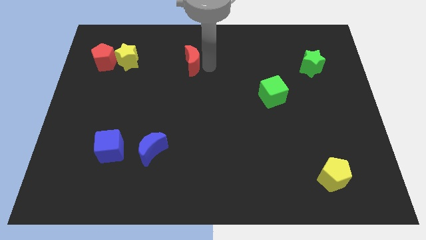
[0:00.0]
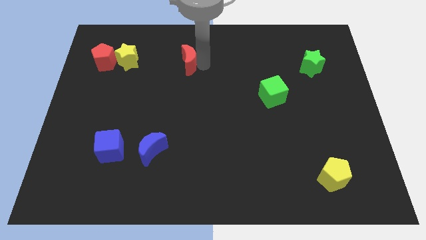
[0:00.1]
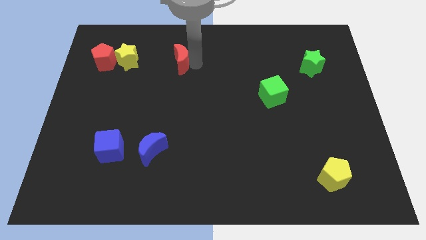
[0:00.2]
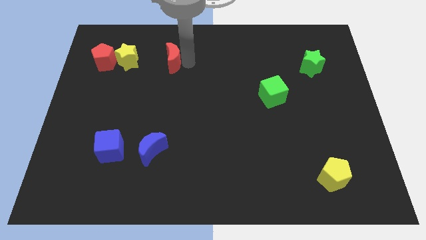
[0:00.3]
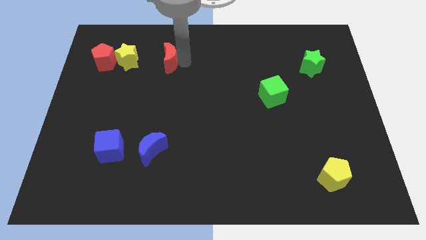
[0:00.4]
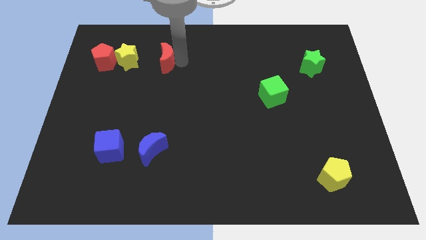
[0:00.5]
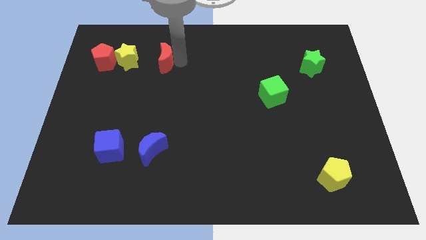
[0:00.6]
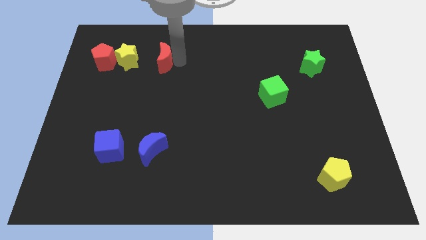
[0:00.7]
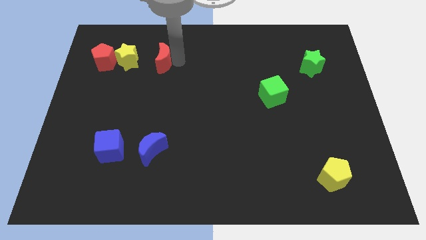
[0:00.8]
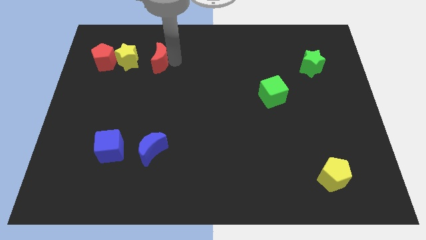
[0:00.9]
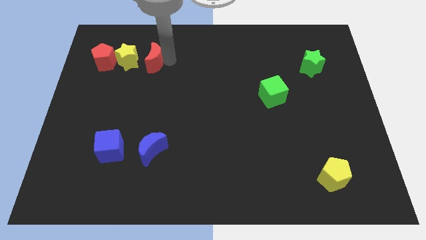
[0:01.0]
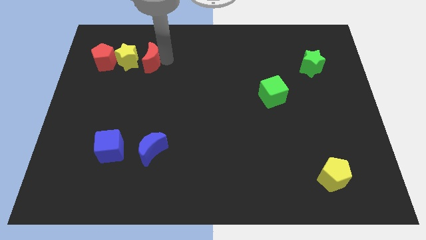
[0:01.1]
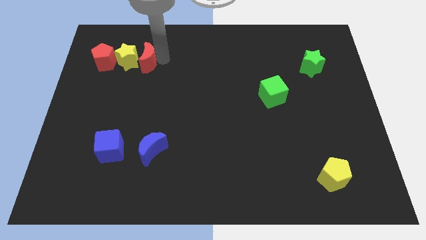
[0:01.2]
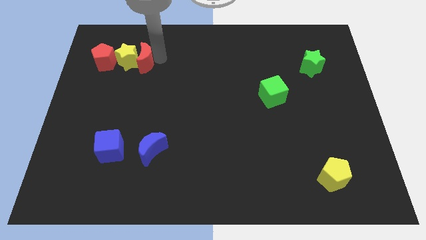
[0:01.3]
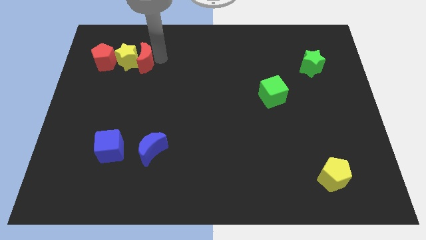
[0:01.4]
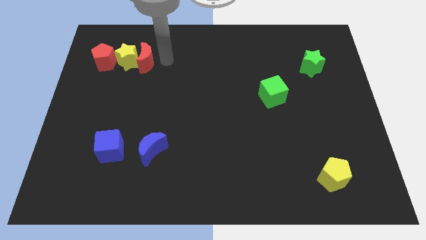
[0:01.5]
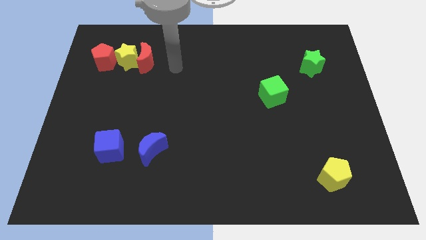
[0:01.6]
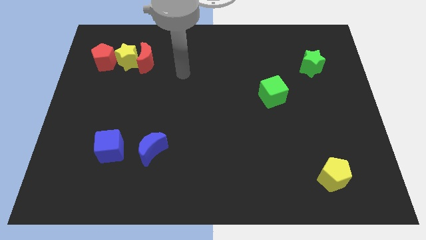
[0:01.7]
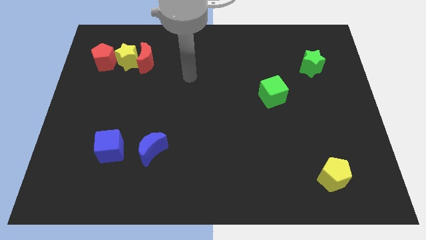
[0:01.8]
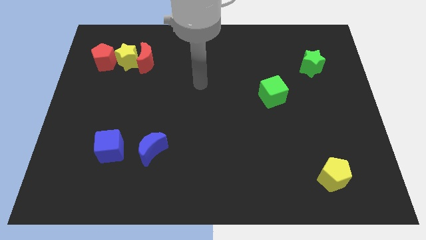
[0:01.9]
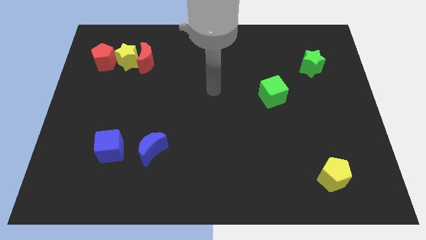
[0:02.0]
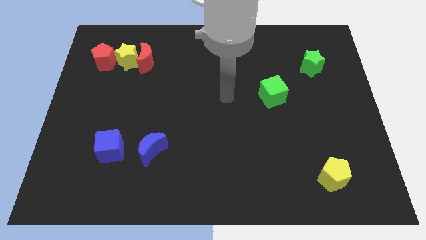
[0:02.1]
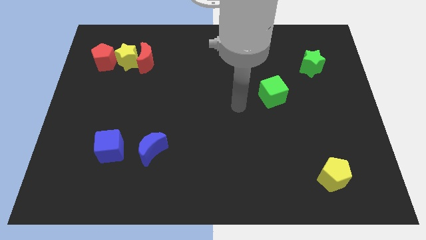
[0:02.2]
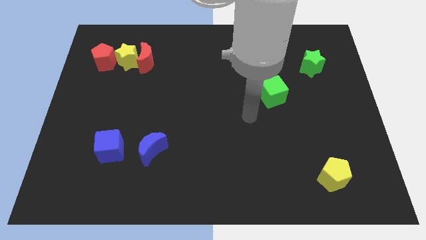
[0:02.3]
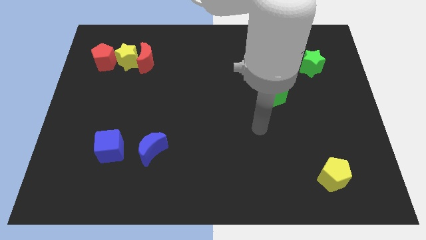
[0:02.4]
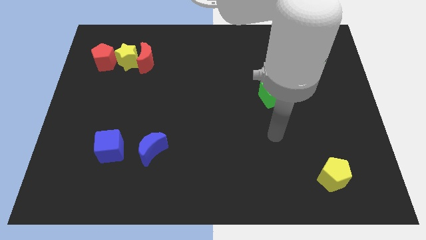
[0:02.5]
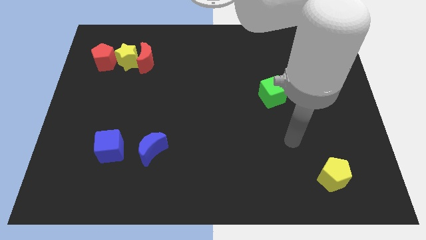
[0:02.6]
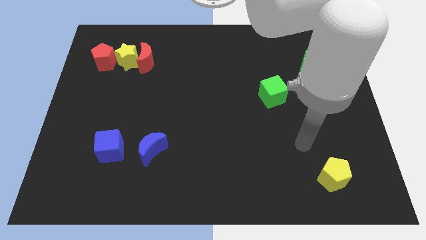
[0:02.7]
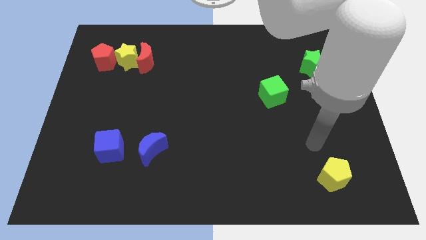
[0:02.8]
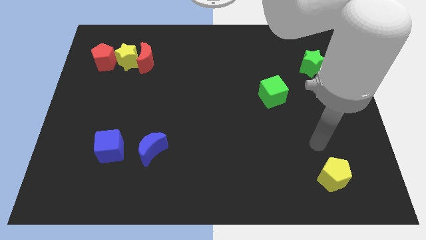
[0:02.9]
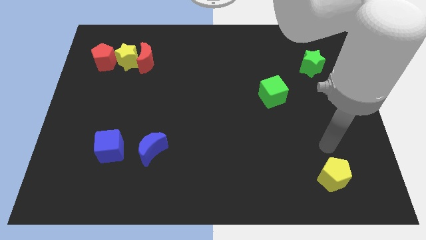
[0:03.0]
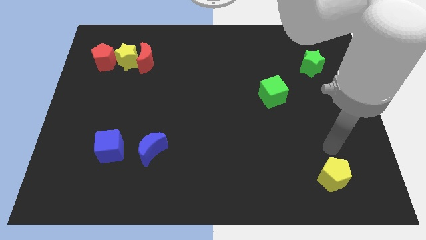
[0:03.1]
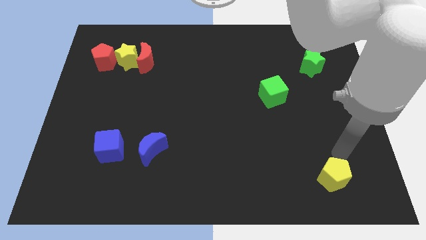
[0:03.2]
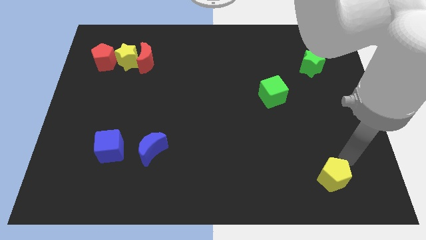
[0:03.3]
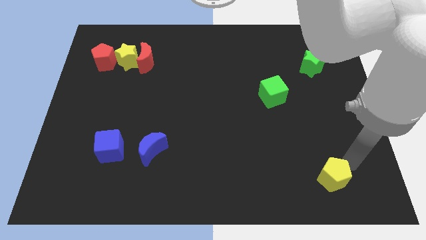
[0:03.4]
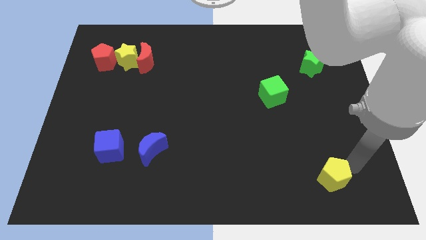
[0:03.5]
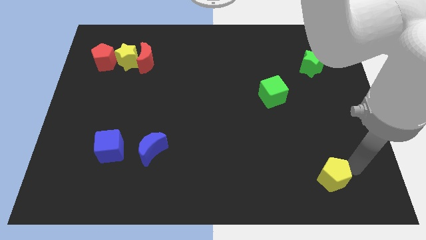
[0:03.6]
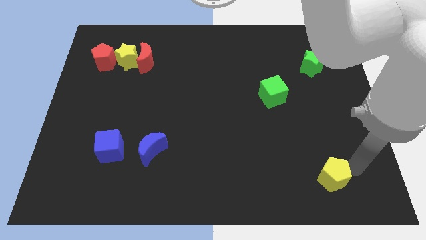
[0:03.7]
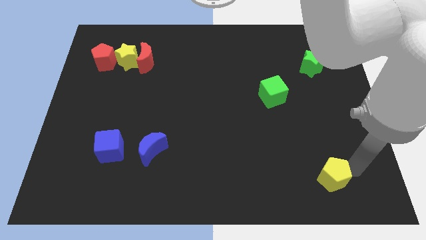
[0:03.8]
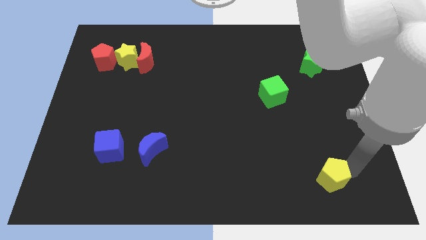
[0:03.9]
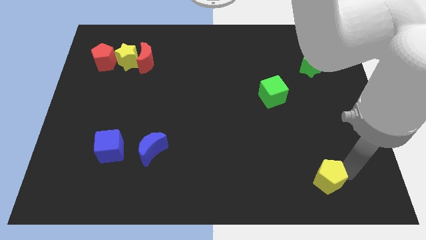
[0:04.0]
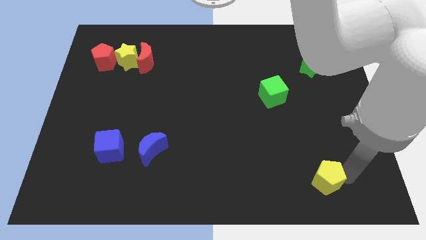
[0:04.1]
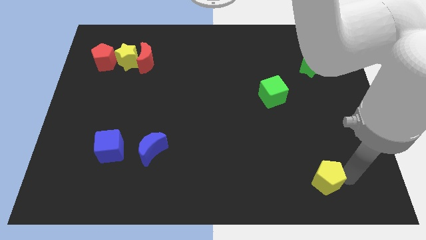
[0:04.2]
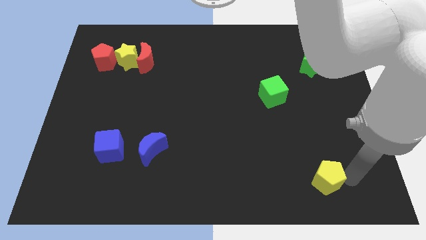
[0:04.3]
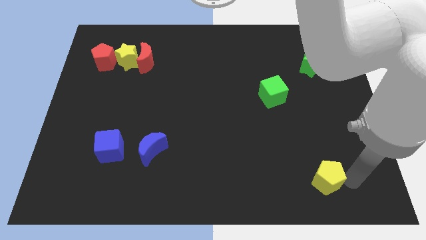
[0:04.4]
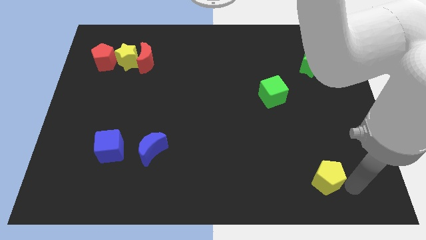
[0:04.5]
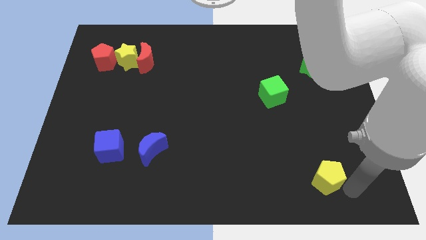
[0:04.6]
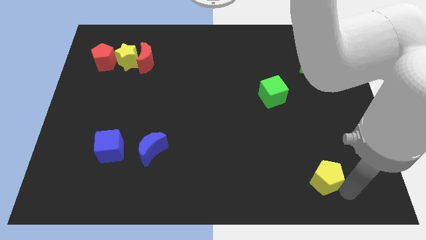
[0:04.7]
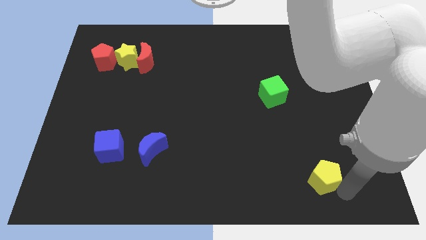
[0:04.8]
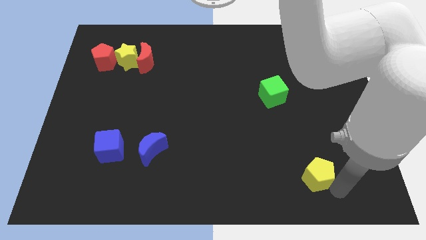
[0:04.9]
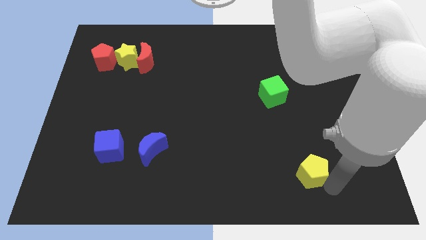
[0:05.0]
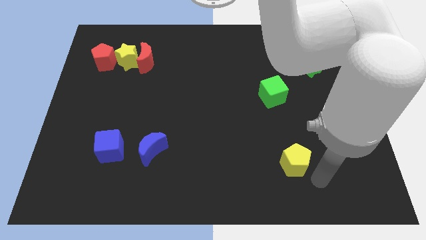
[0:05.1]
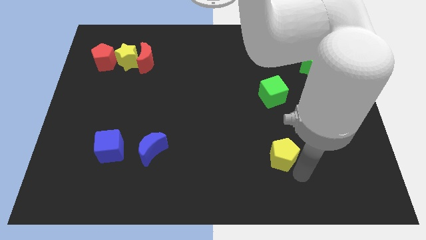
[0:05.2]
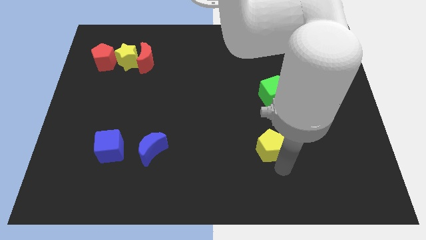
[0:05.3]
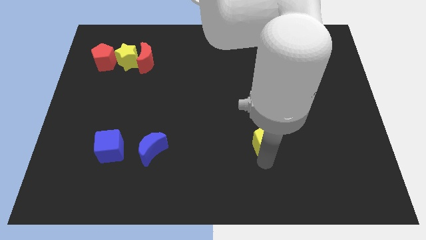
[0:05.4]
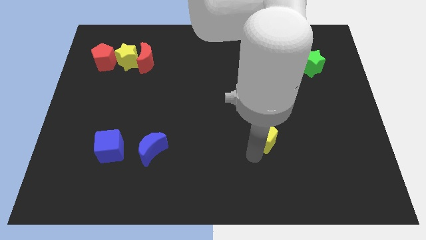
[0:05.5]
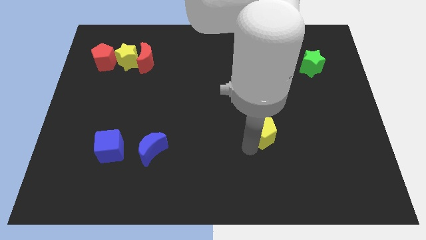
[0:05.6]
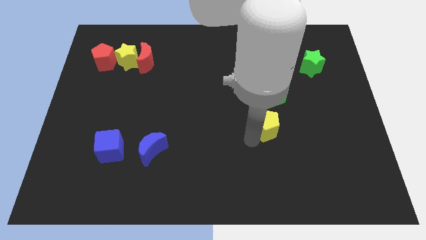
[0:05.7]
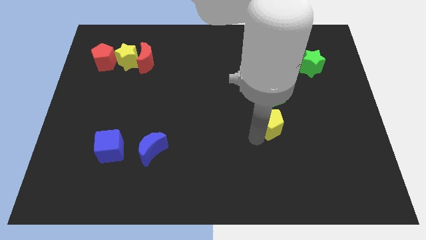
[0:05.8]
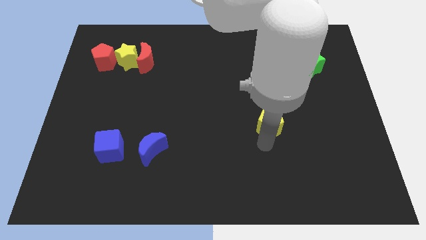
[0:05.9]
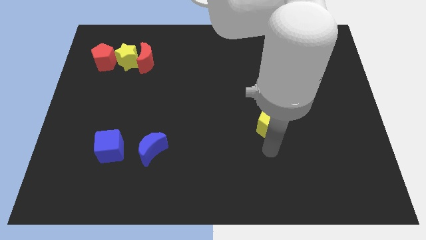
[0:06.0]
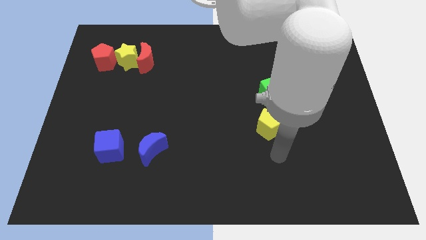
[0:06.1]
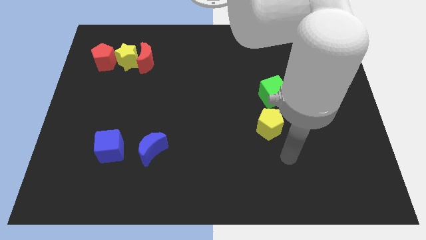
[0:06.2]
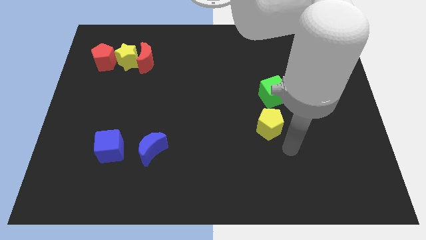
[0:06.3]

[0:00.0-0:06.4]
push the yellow pentagon towrads the green cube

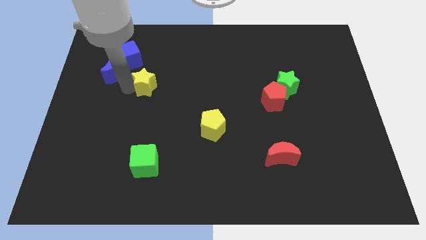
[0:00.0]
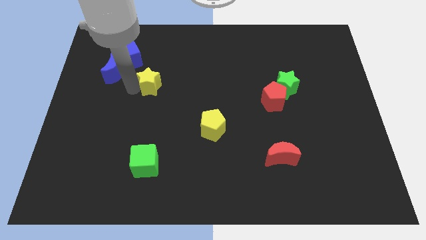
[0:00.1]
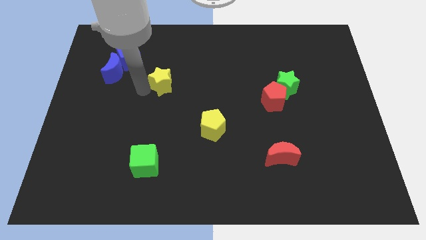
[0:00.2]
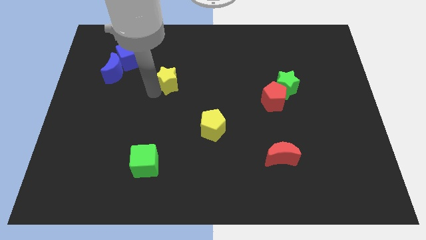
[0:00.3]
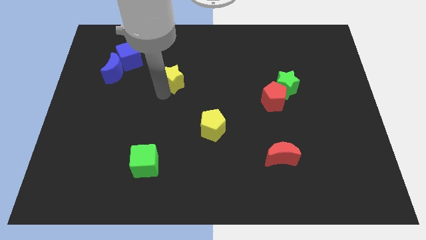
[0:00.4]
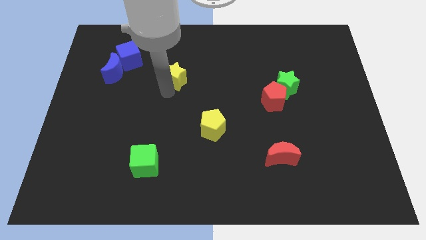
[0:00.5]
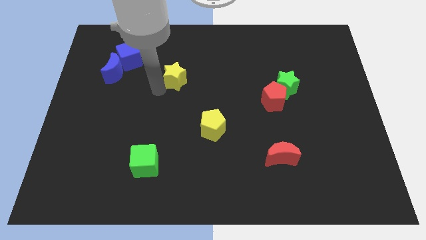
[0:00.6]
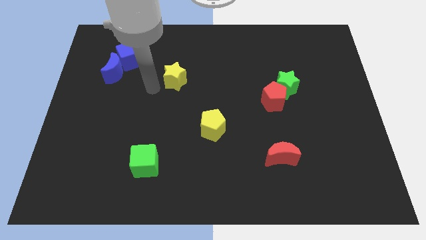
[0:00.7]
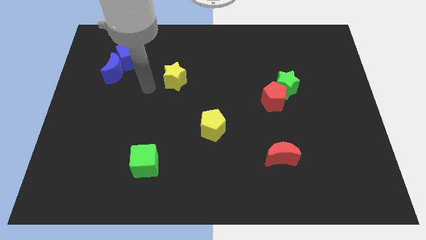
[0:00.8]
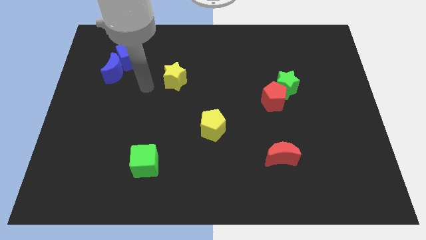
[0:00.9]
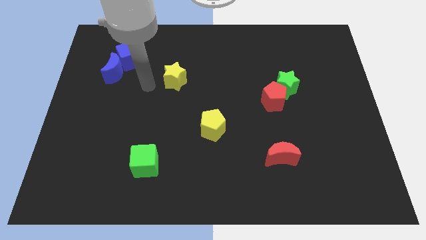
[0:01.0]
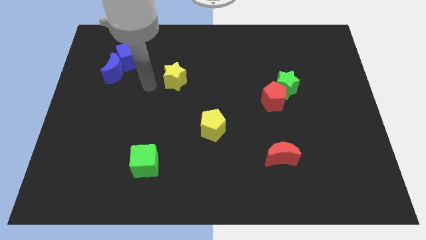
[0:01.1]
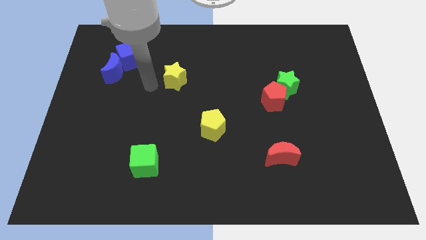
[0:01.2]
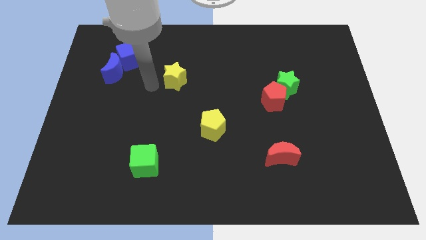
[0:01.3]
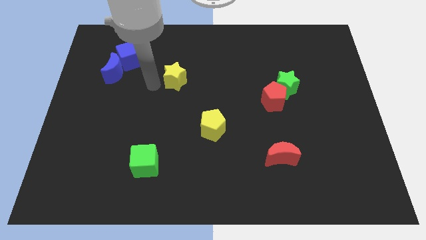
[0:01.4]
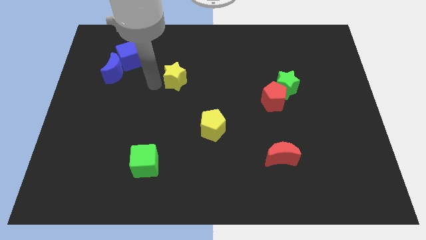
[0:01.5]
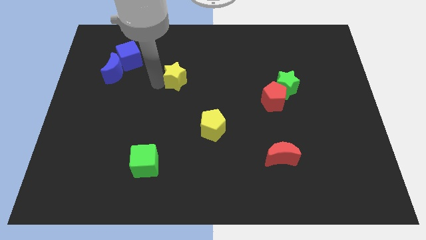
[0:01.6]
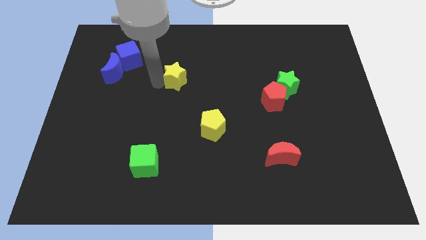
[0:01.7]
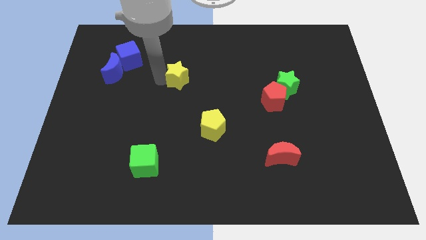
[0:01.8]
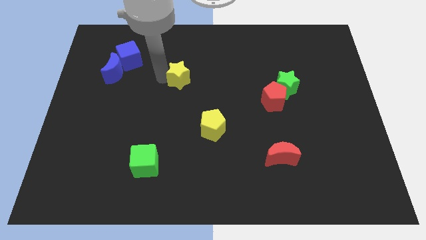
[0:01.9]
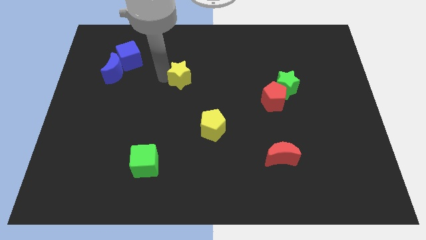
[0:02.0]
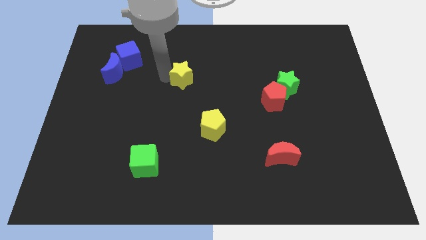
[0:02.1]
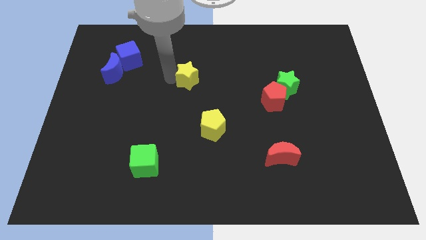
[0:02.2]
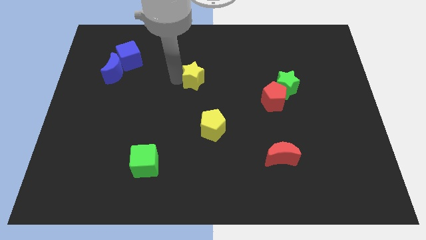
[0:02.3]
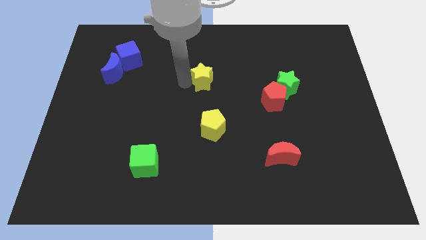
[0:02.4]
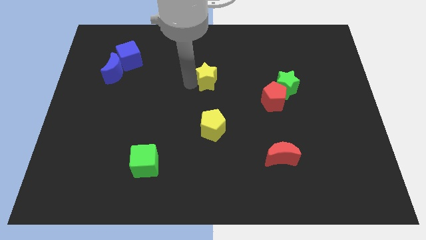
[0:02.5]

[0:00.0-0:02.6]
place yellow star to the top of the yellow pentagon
